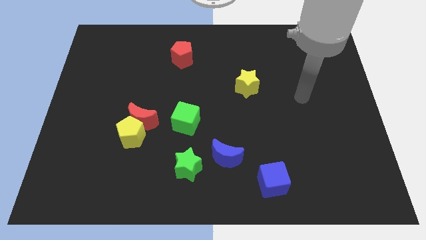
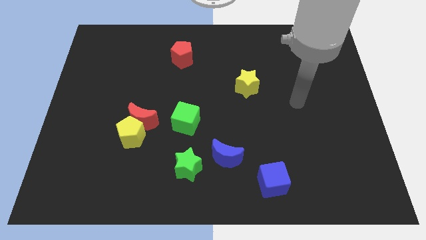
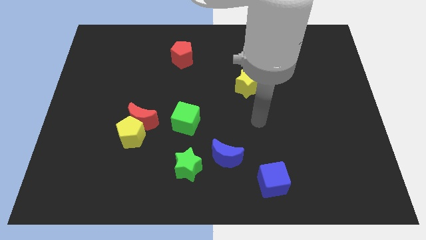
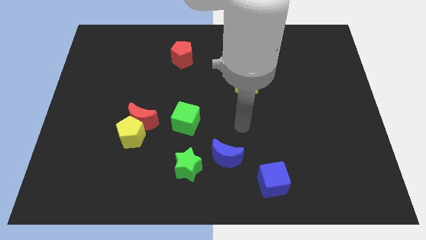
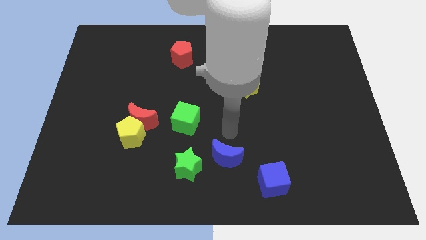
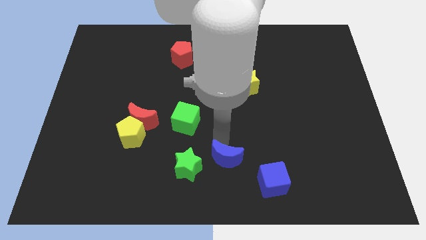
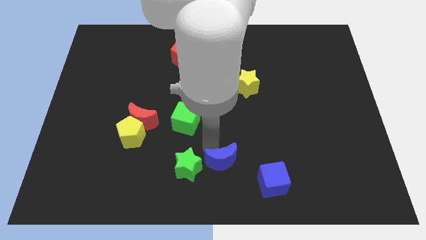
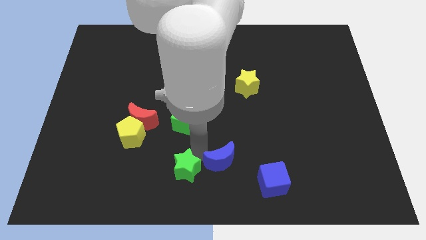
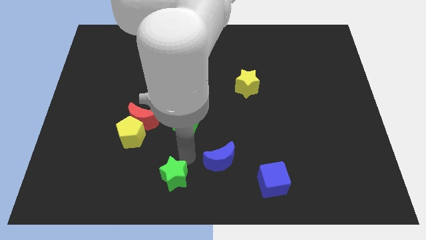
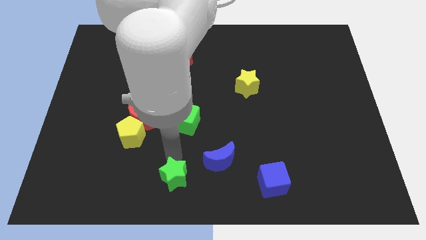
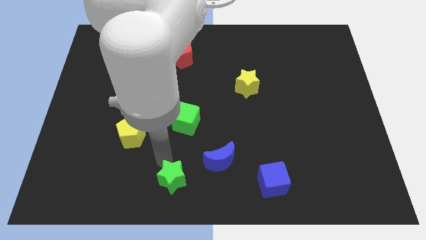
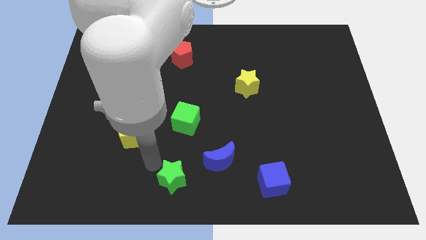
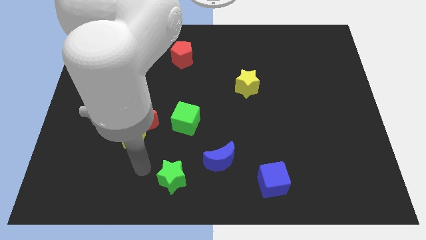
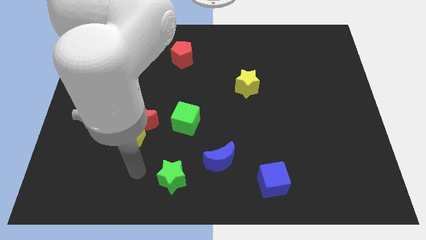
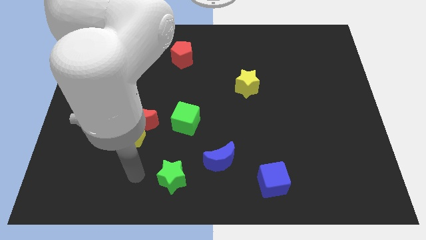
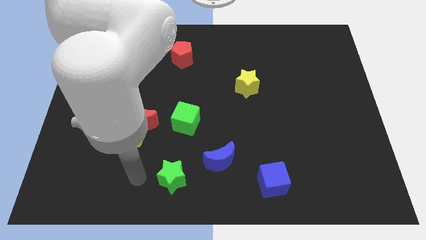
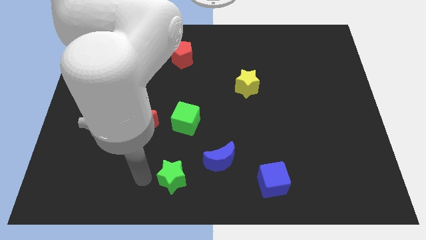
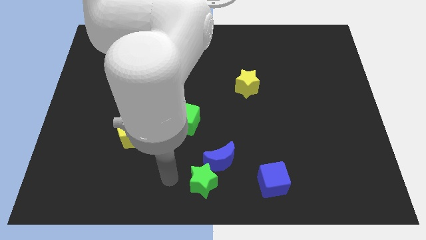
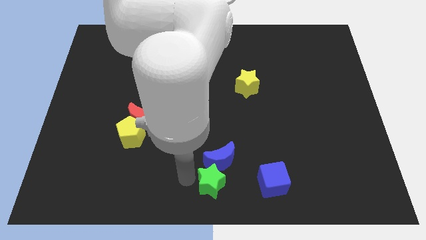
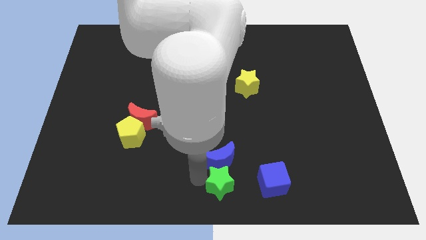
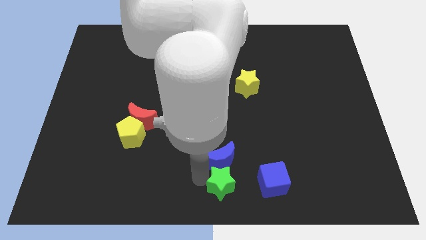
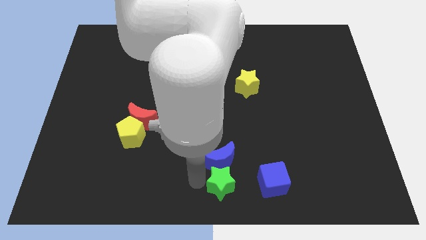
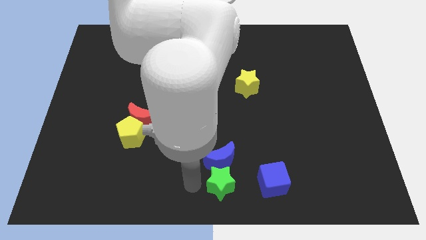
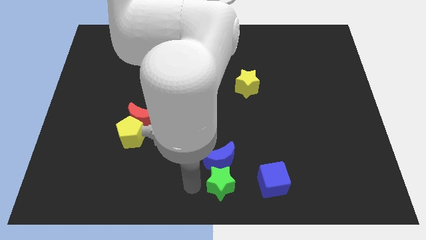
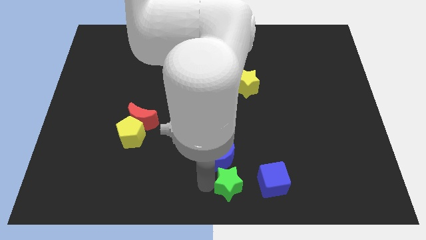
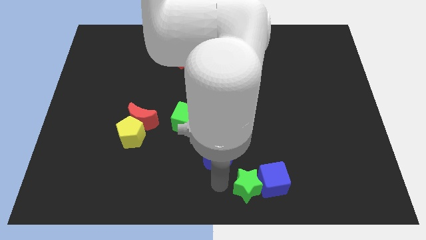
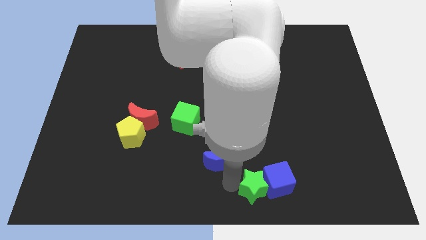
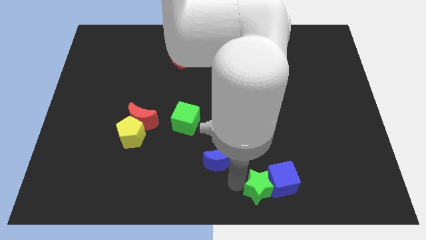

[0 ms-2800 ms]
slide the green star to the blue cube

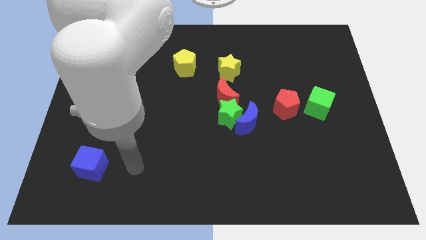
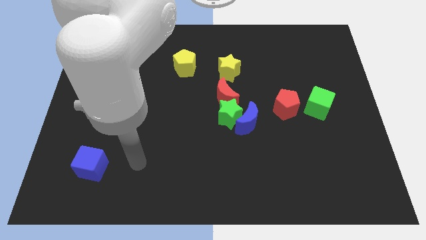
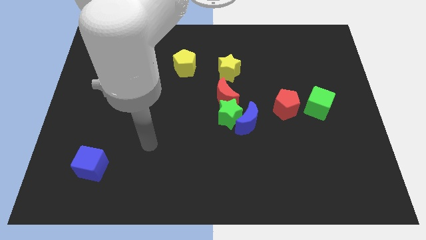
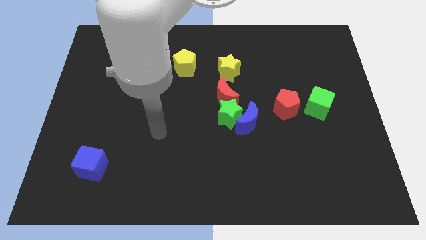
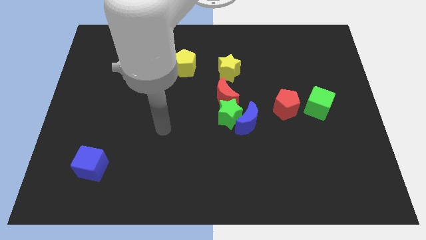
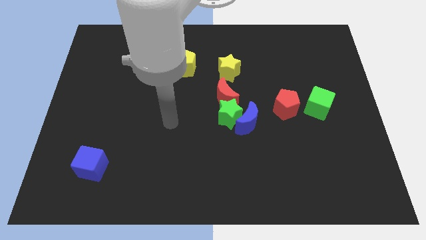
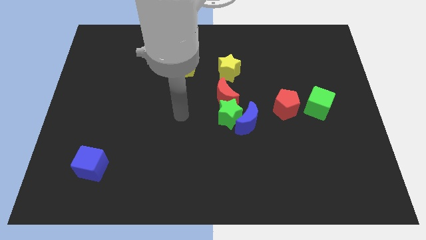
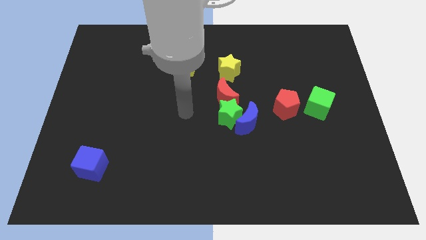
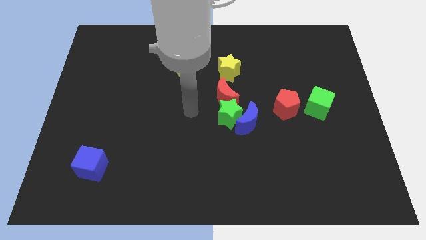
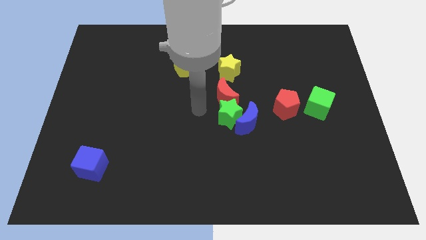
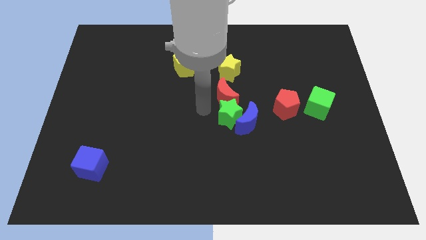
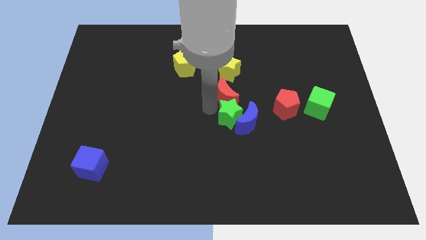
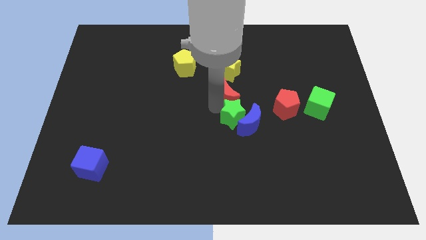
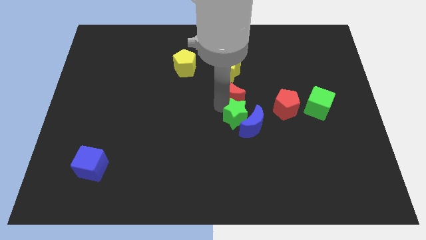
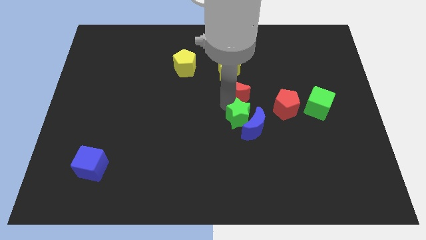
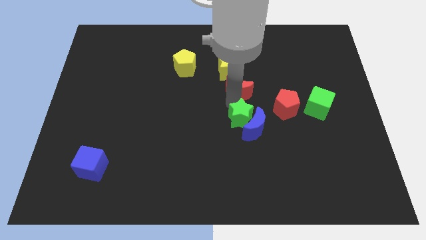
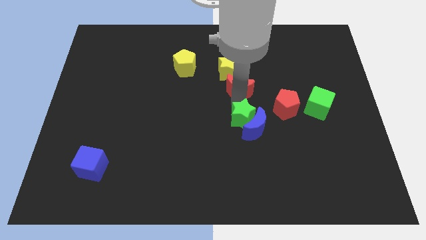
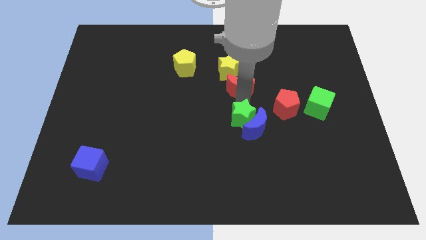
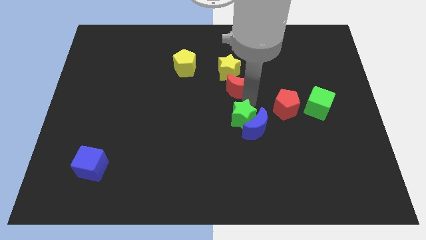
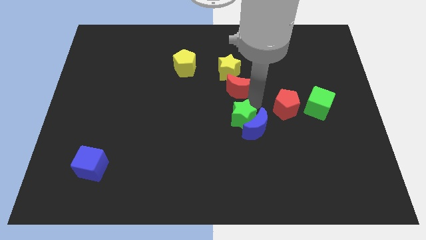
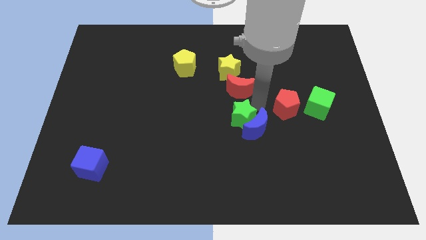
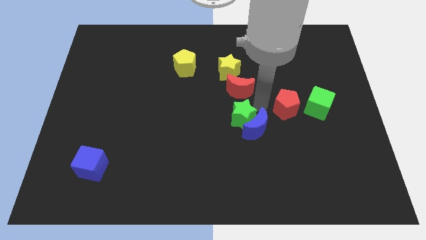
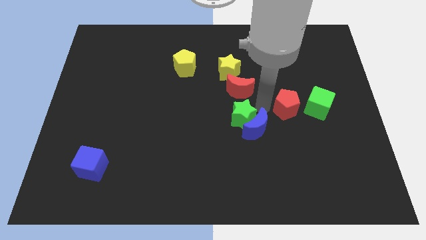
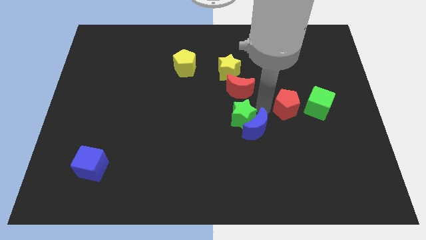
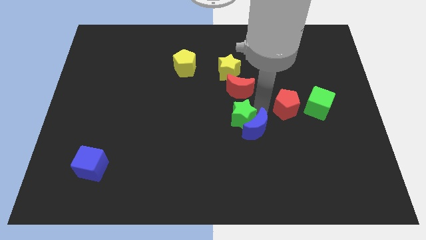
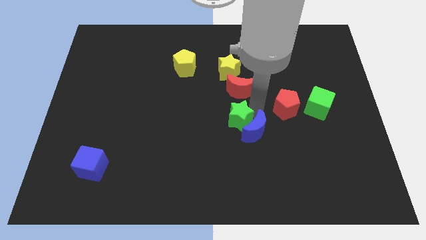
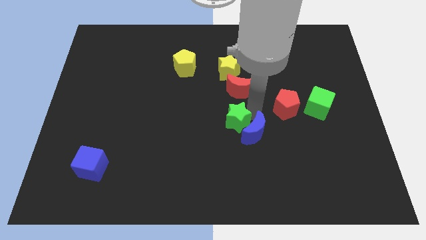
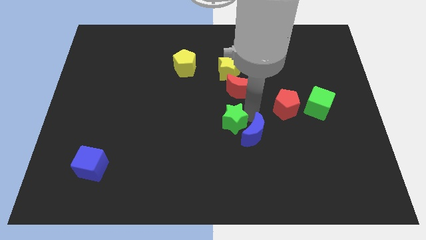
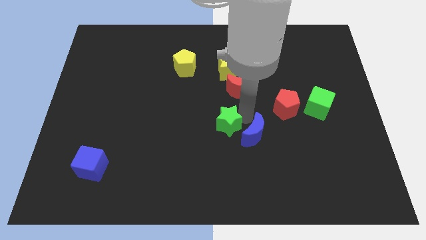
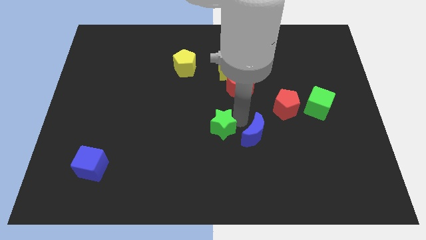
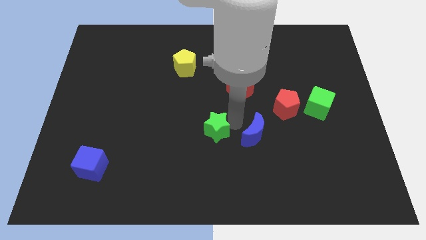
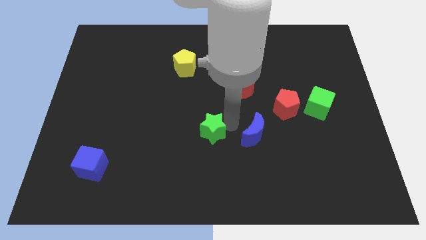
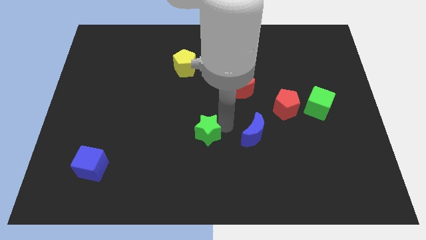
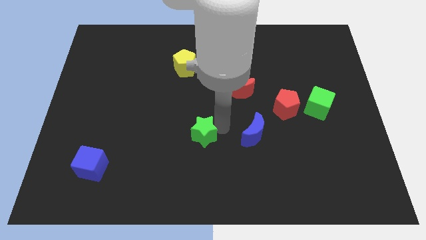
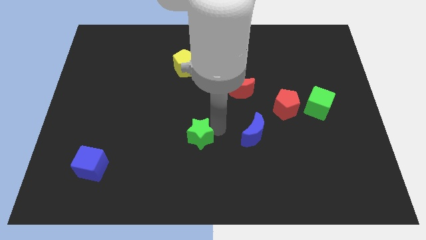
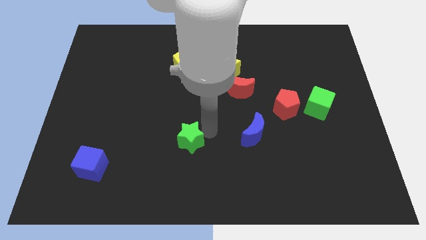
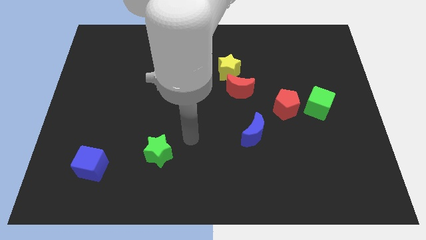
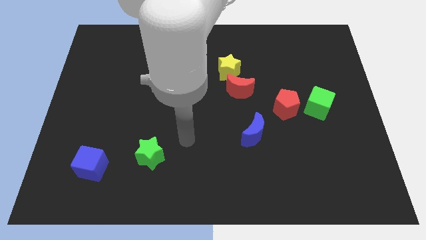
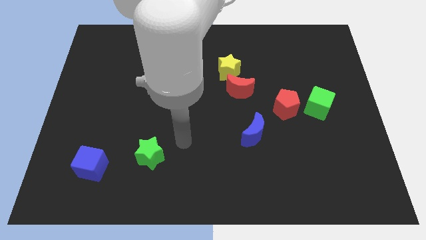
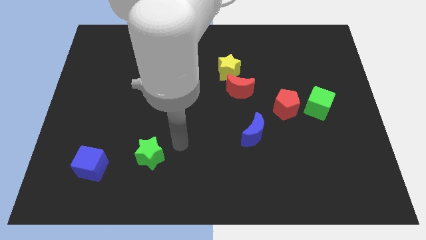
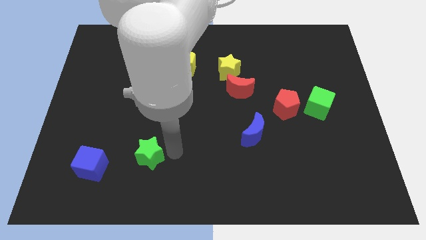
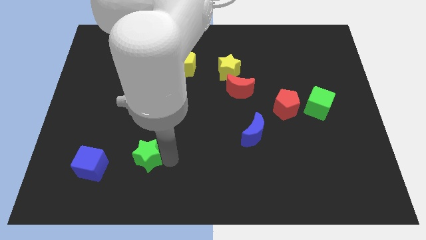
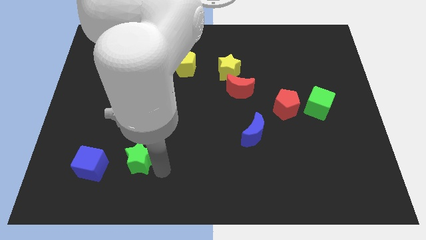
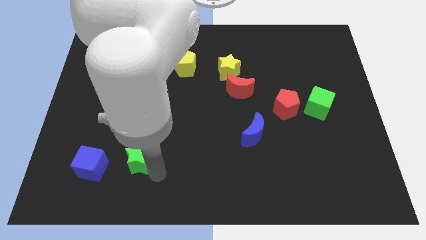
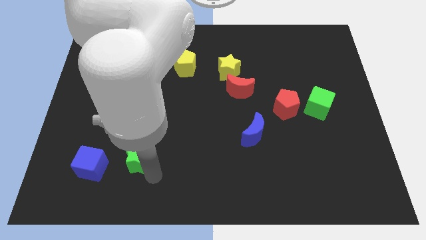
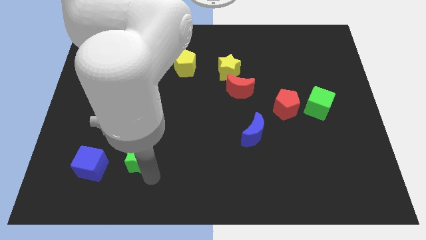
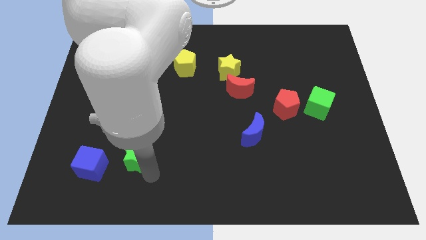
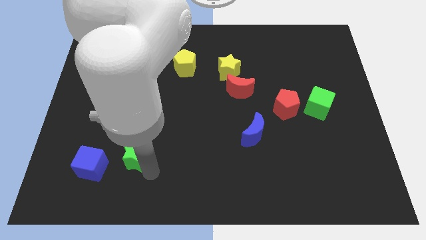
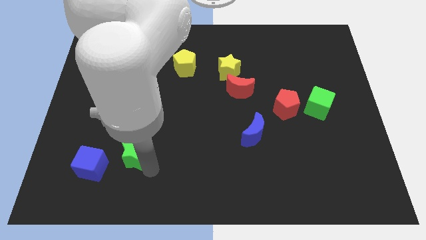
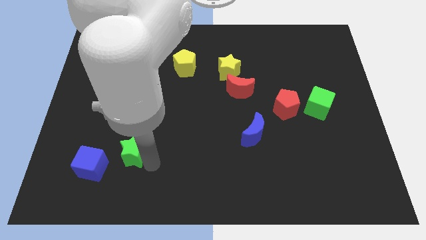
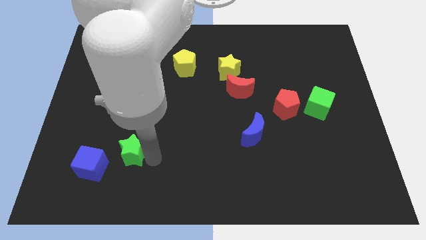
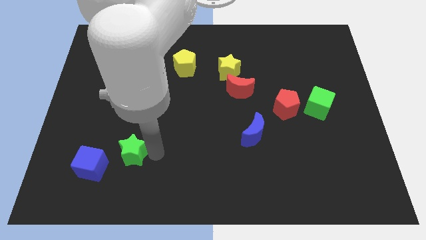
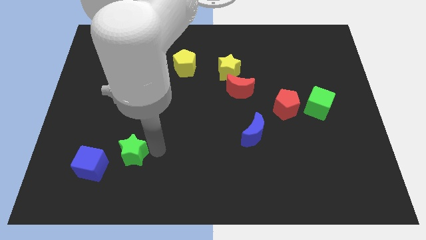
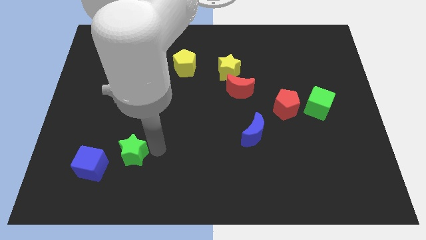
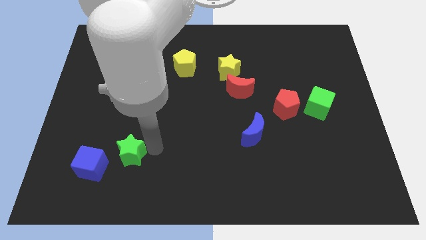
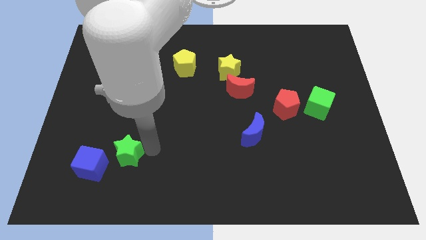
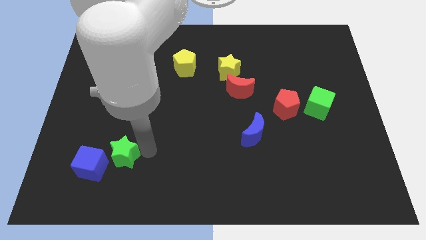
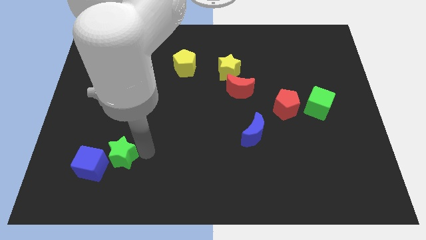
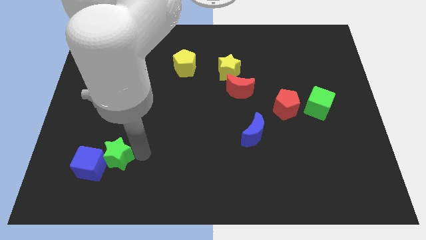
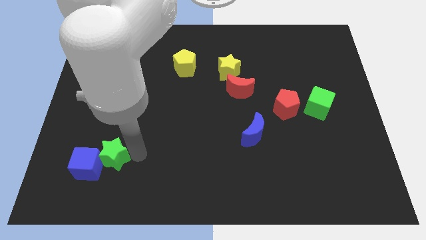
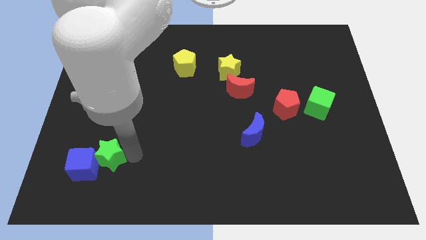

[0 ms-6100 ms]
slide the green star next to the blue cube

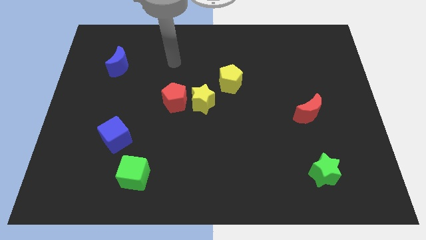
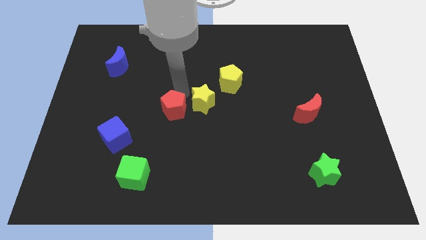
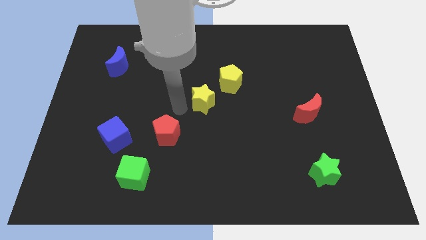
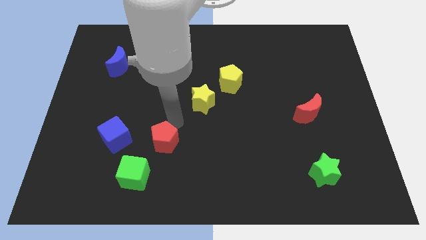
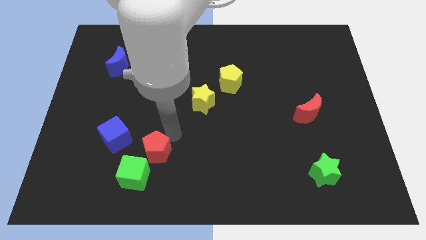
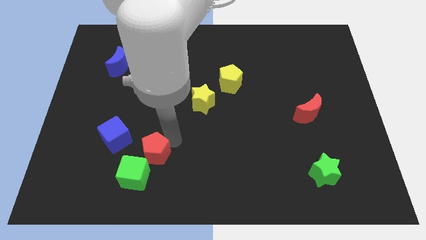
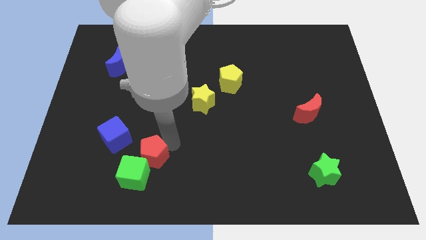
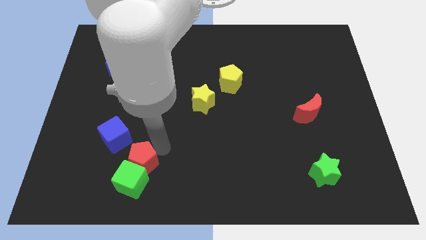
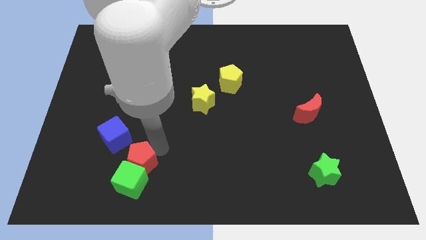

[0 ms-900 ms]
push the red pentagon next to the green cube
